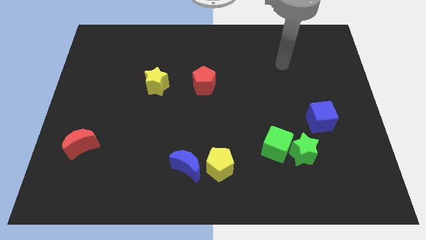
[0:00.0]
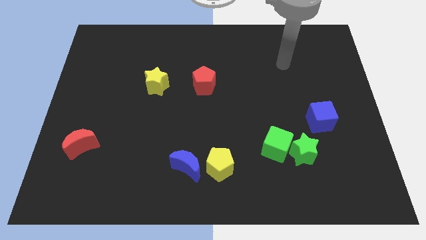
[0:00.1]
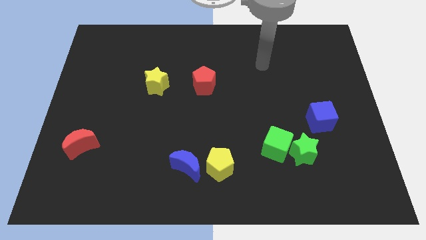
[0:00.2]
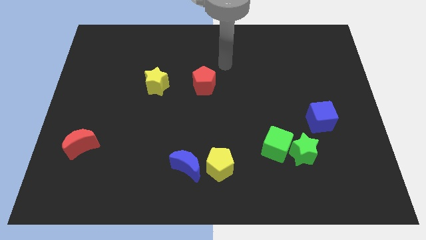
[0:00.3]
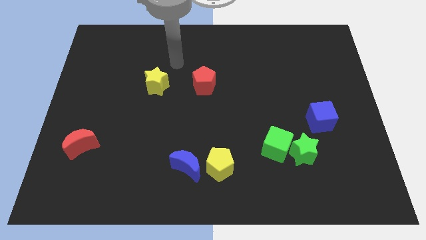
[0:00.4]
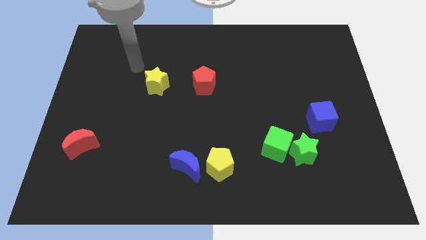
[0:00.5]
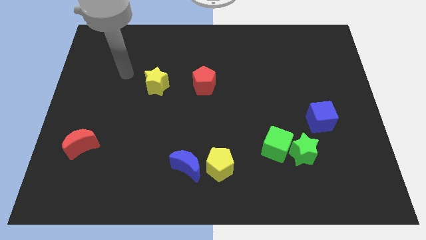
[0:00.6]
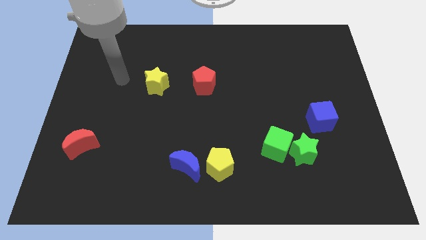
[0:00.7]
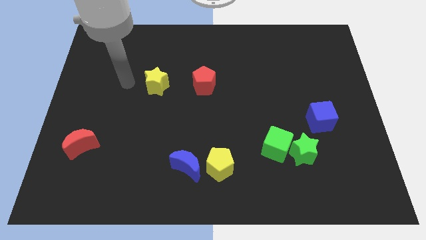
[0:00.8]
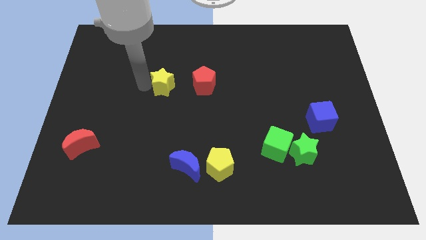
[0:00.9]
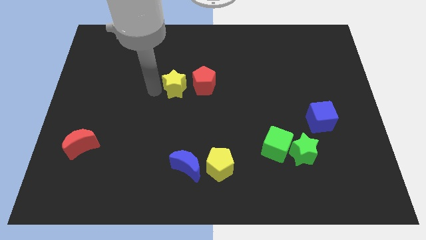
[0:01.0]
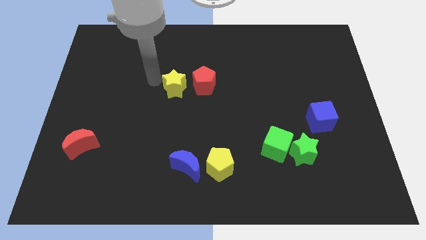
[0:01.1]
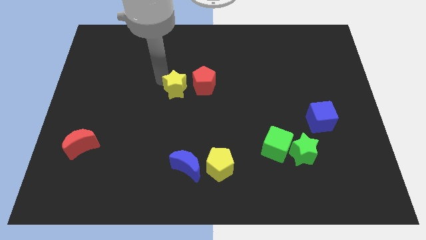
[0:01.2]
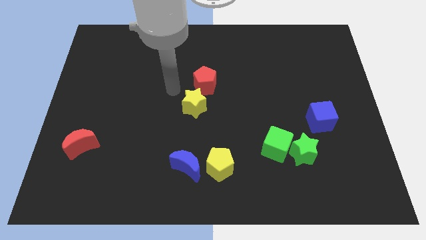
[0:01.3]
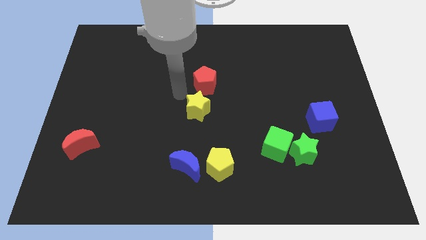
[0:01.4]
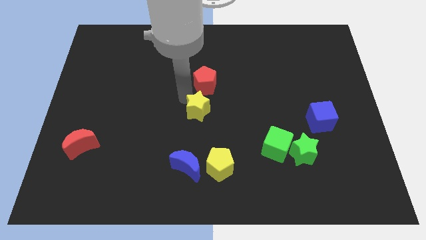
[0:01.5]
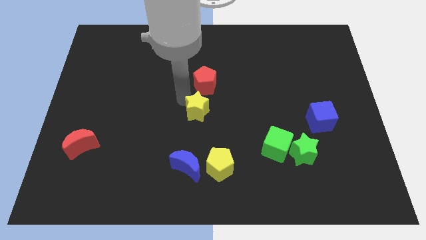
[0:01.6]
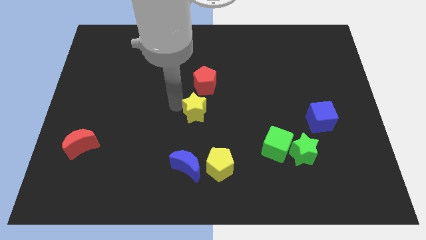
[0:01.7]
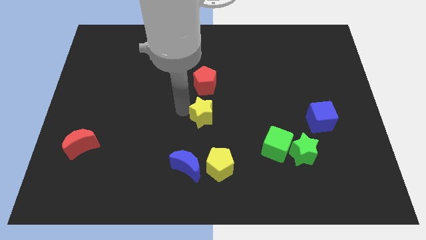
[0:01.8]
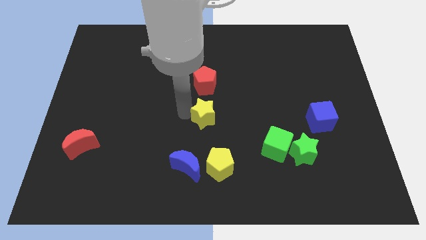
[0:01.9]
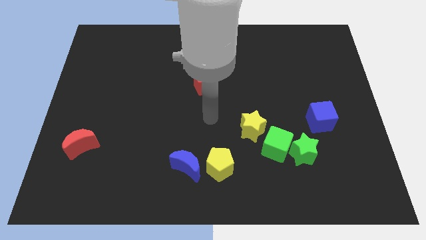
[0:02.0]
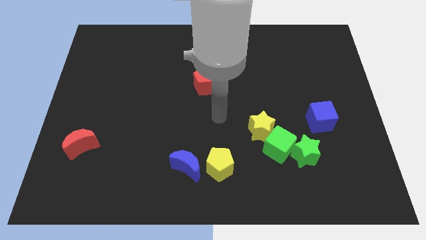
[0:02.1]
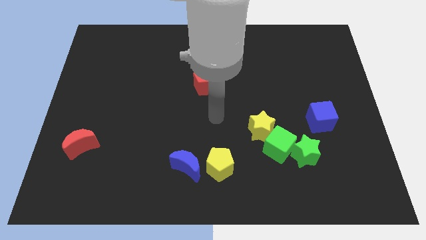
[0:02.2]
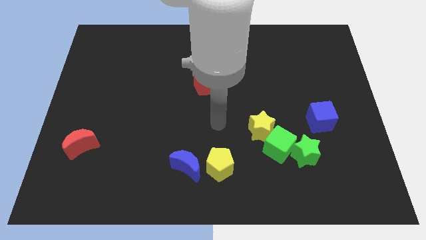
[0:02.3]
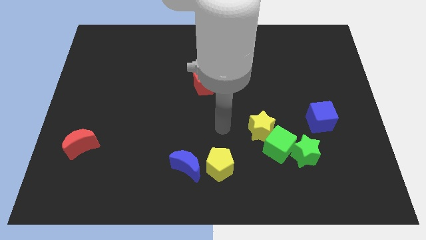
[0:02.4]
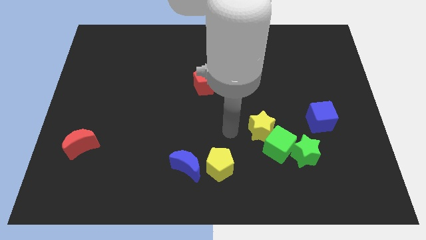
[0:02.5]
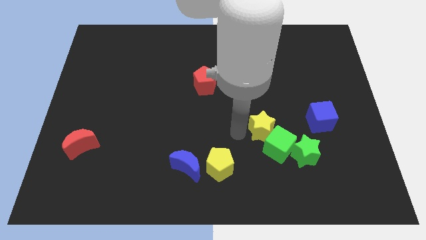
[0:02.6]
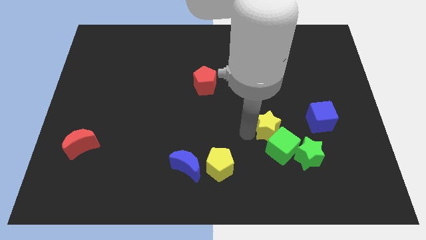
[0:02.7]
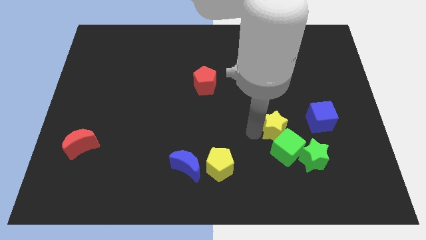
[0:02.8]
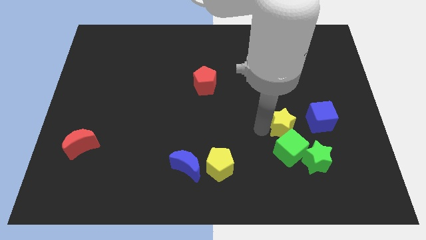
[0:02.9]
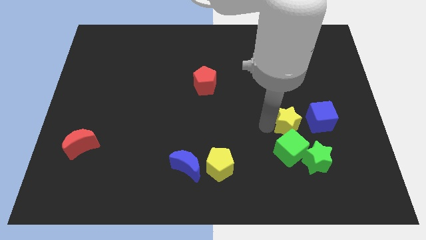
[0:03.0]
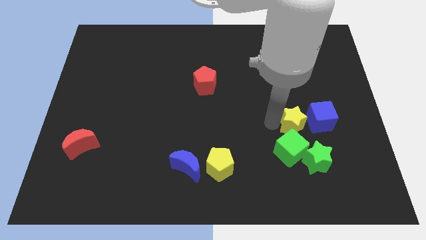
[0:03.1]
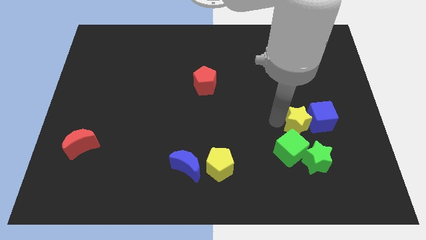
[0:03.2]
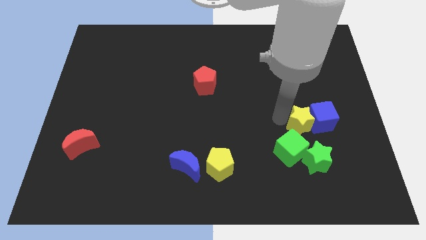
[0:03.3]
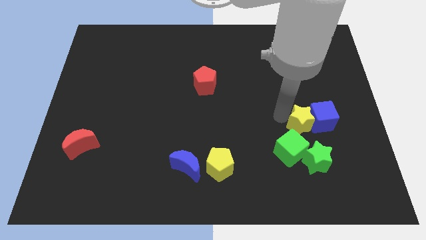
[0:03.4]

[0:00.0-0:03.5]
push the yellow star to the blue cube

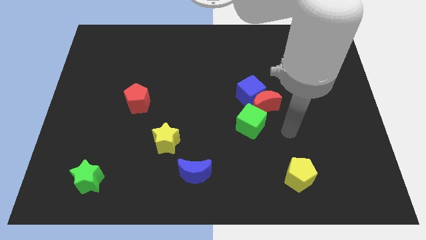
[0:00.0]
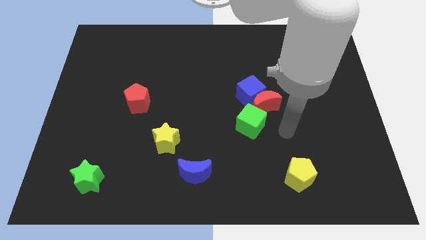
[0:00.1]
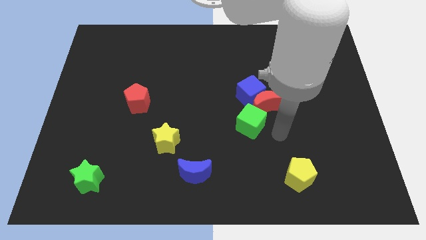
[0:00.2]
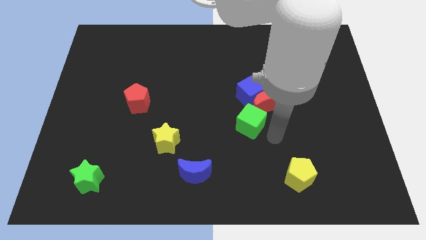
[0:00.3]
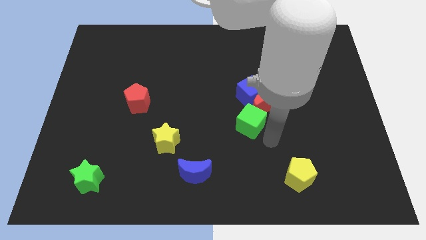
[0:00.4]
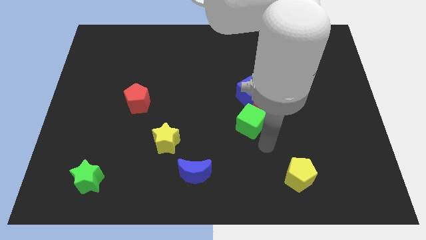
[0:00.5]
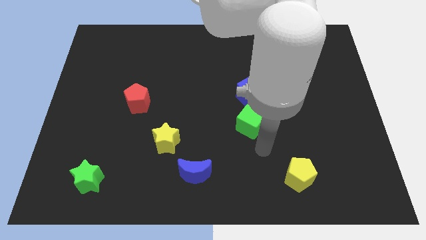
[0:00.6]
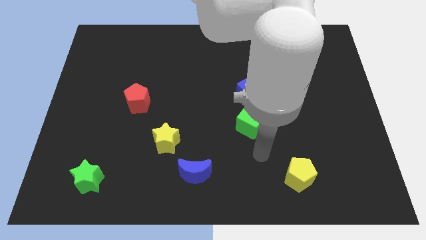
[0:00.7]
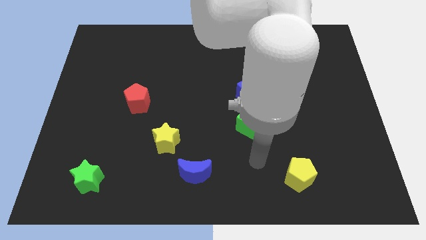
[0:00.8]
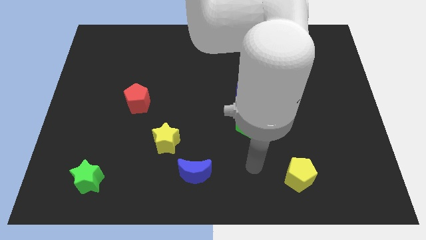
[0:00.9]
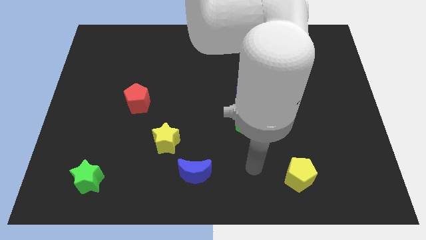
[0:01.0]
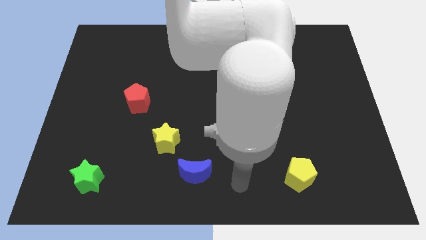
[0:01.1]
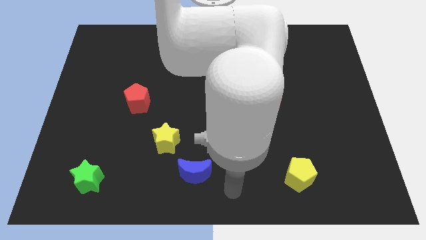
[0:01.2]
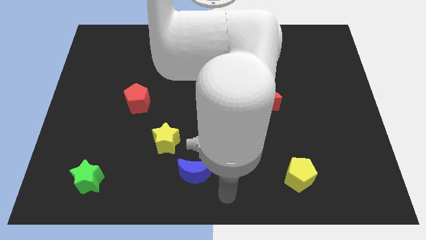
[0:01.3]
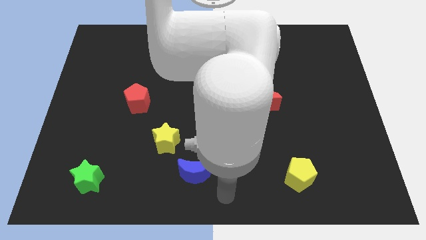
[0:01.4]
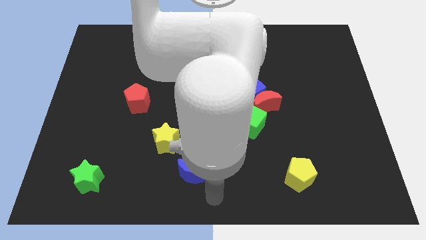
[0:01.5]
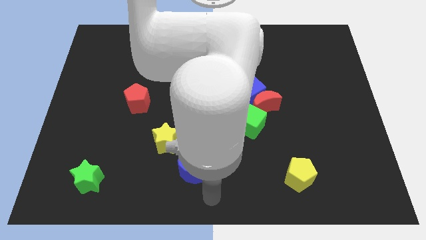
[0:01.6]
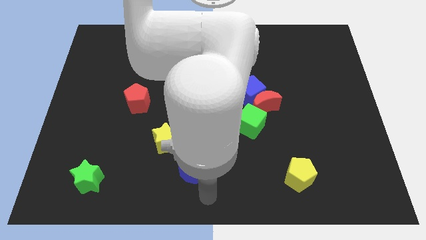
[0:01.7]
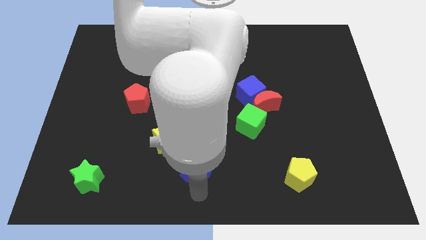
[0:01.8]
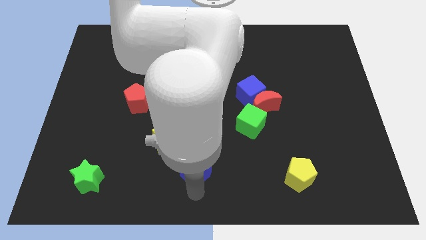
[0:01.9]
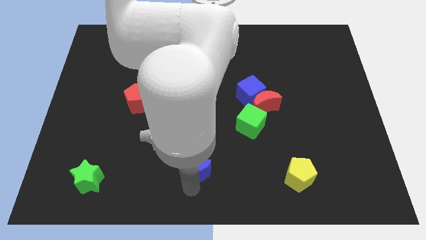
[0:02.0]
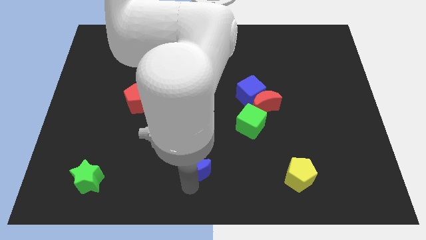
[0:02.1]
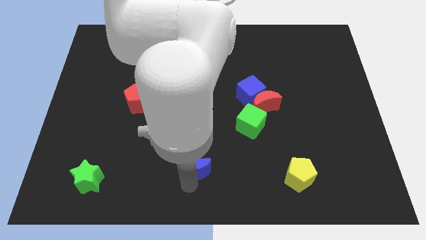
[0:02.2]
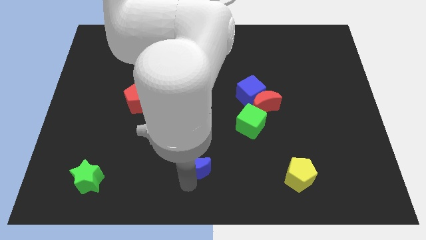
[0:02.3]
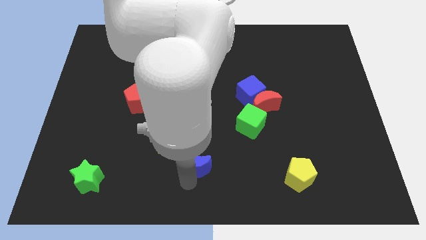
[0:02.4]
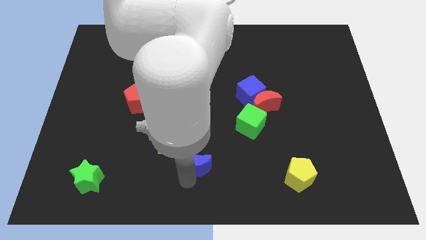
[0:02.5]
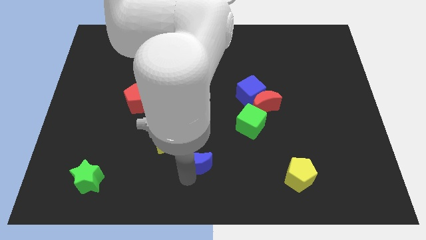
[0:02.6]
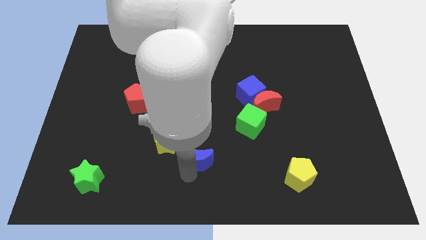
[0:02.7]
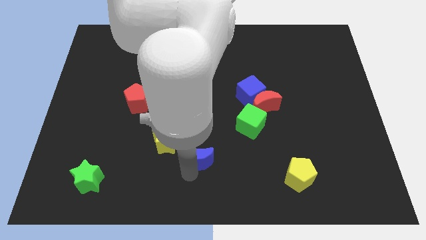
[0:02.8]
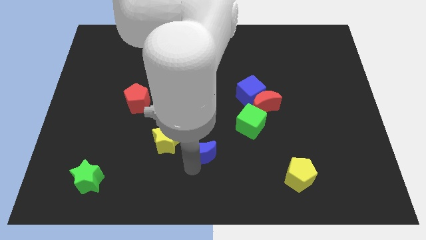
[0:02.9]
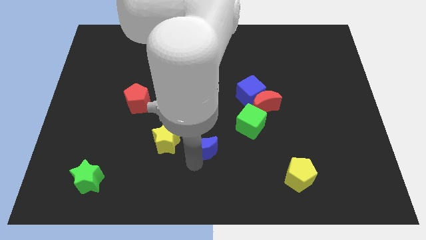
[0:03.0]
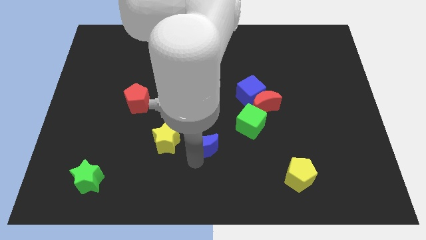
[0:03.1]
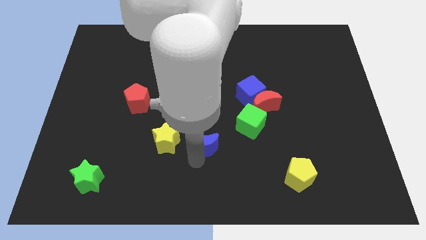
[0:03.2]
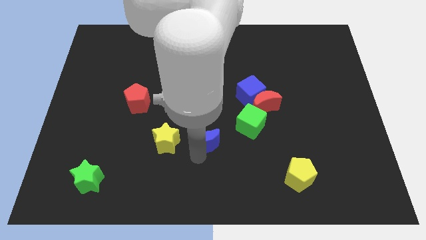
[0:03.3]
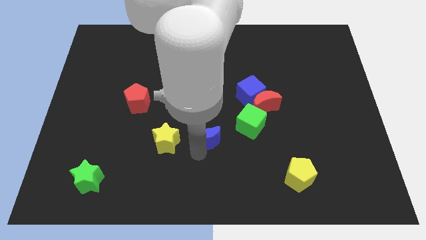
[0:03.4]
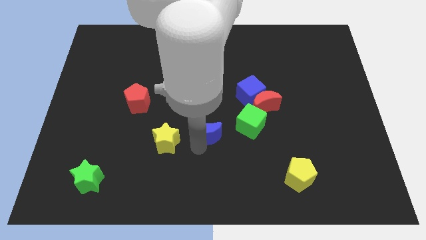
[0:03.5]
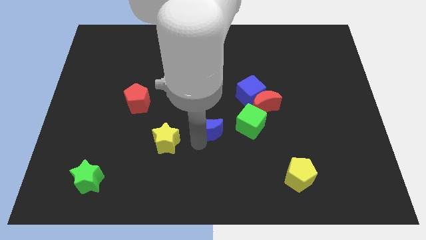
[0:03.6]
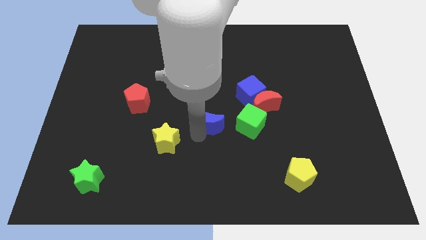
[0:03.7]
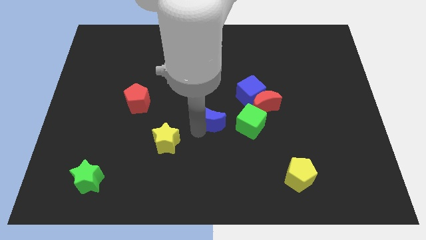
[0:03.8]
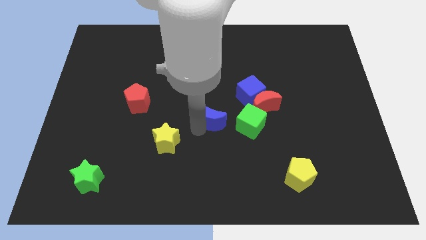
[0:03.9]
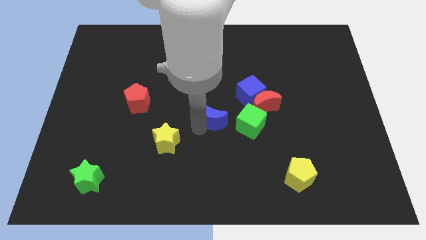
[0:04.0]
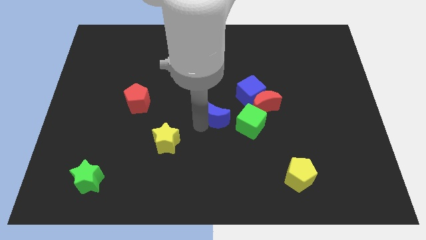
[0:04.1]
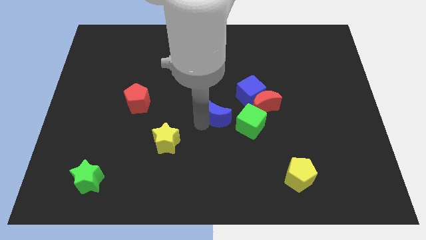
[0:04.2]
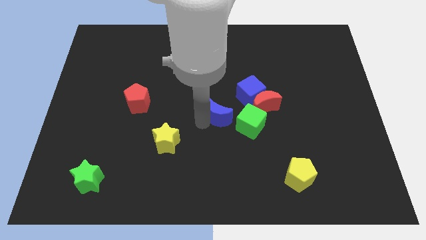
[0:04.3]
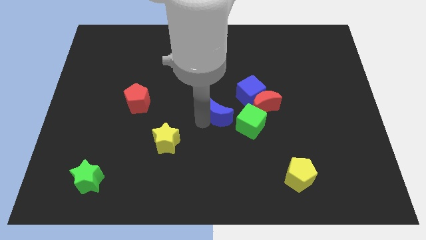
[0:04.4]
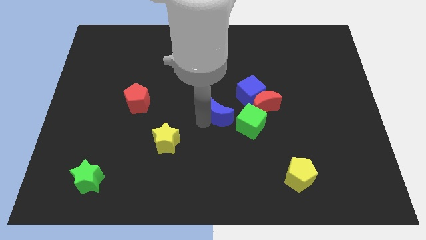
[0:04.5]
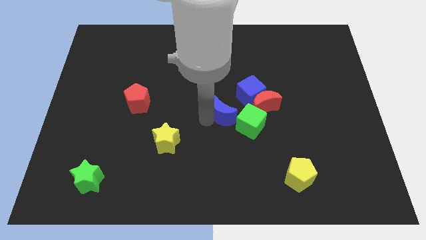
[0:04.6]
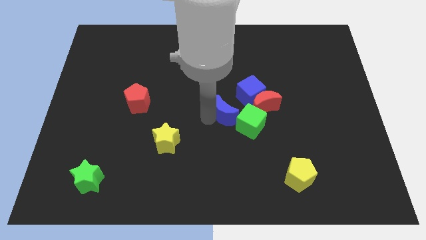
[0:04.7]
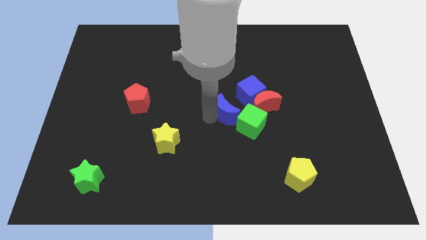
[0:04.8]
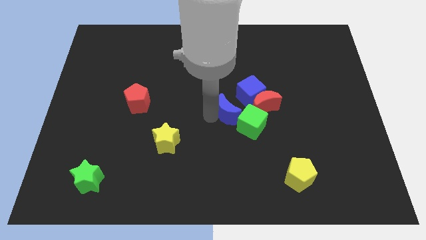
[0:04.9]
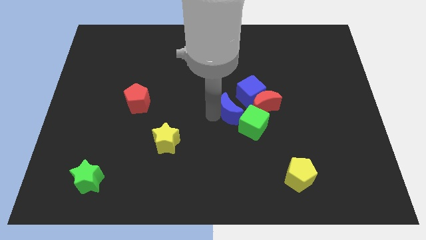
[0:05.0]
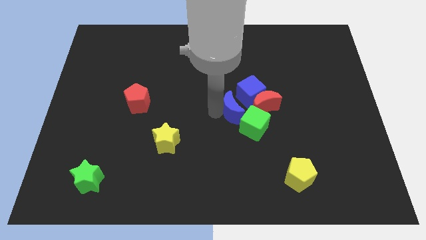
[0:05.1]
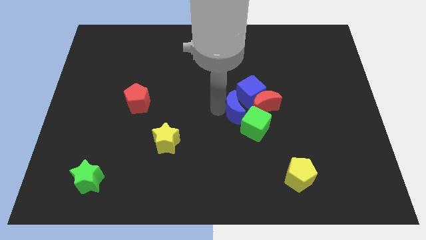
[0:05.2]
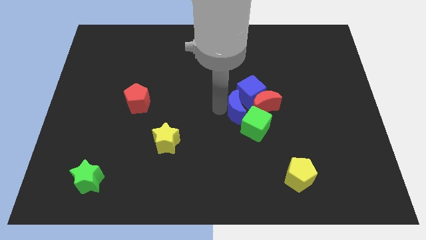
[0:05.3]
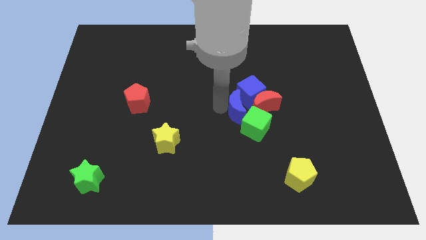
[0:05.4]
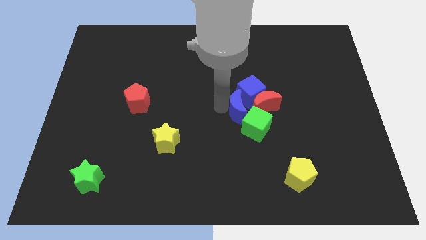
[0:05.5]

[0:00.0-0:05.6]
slide the blue moon to the blue cube
